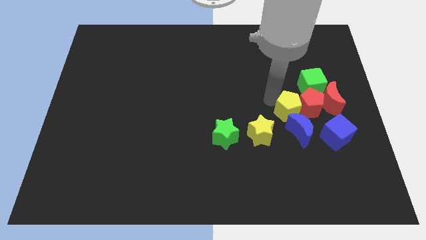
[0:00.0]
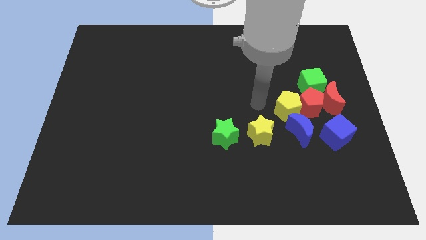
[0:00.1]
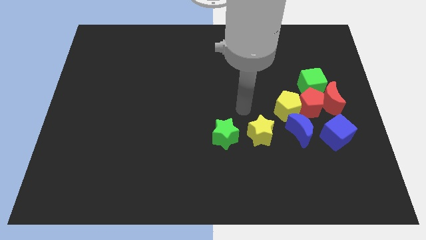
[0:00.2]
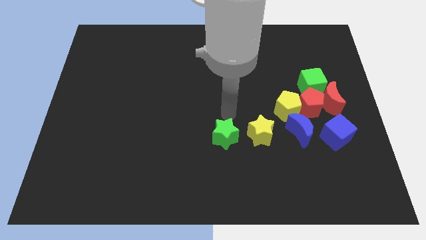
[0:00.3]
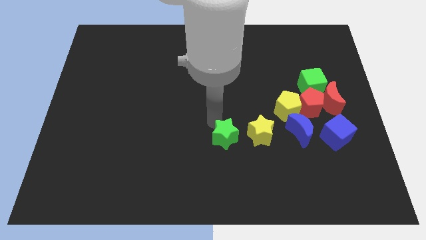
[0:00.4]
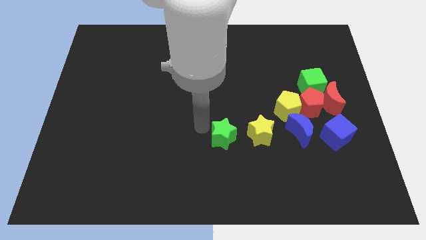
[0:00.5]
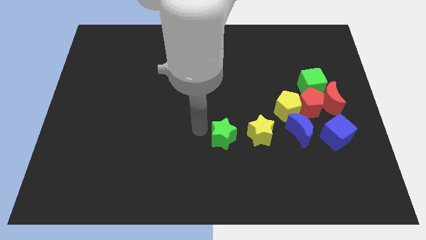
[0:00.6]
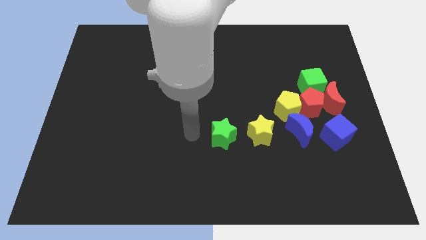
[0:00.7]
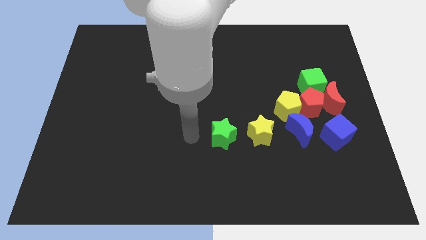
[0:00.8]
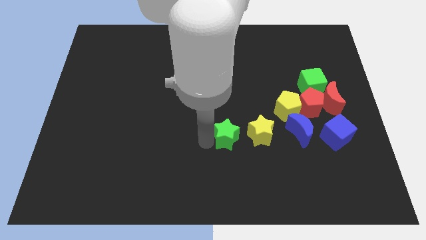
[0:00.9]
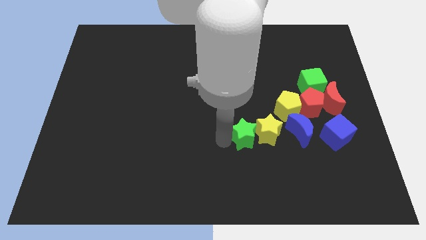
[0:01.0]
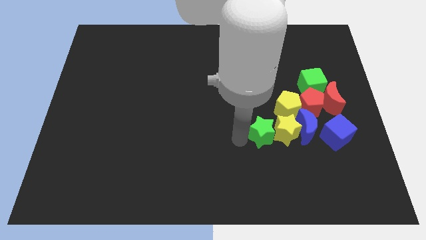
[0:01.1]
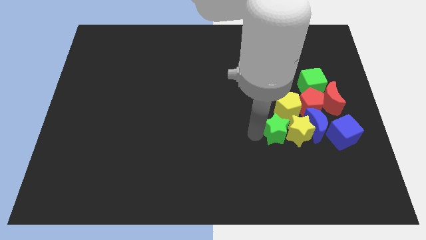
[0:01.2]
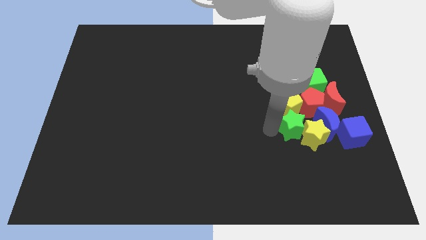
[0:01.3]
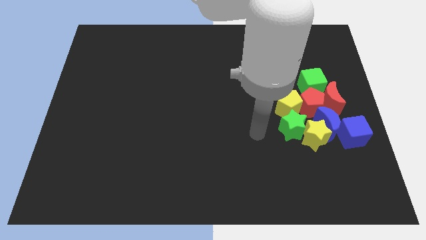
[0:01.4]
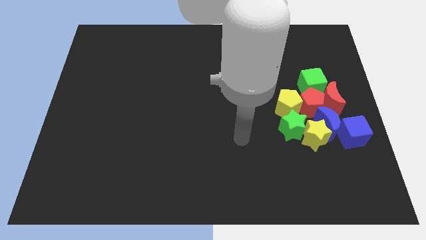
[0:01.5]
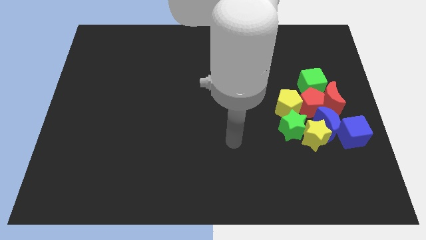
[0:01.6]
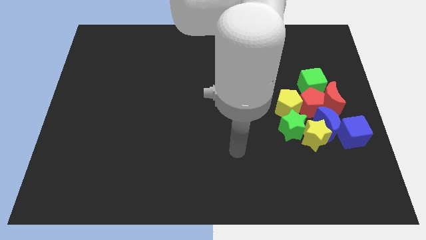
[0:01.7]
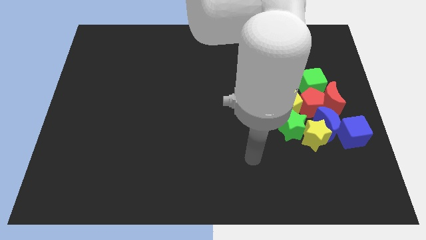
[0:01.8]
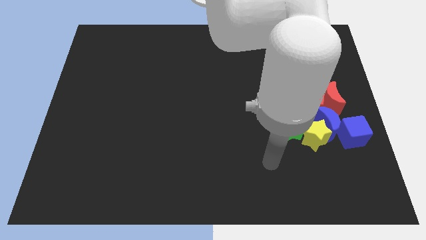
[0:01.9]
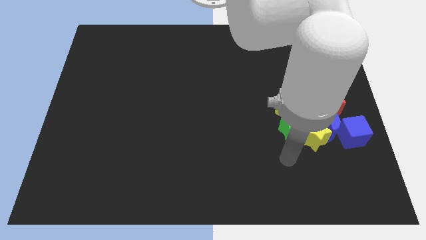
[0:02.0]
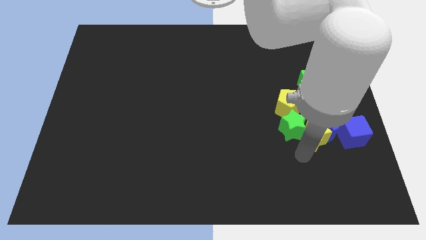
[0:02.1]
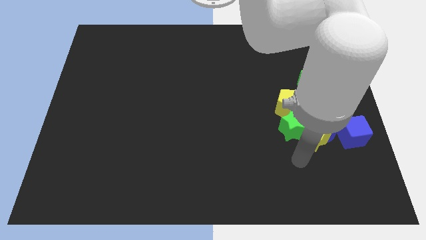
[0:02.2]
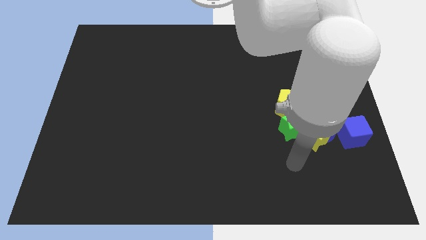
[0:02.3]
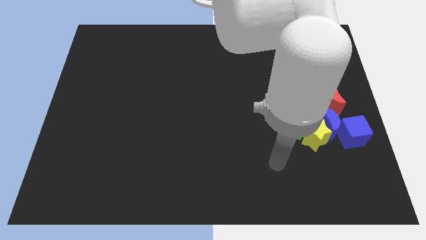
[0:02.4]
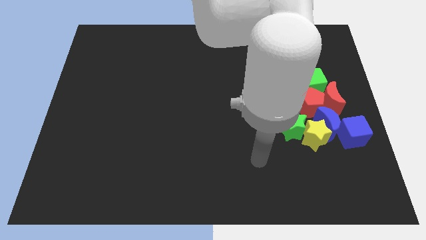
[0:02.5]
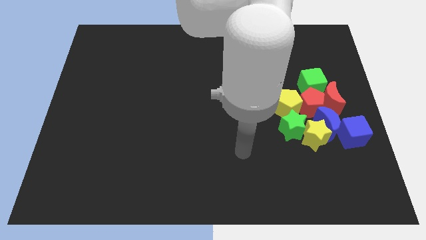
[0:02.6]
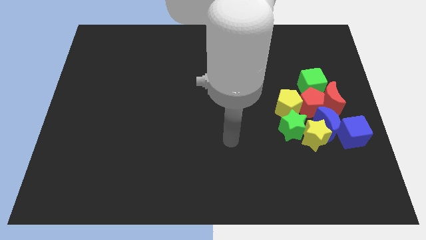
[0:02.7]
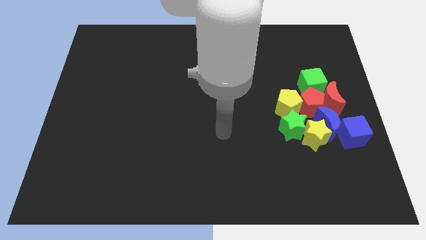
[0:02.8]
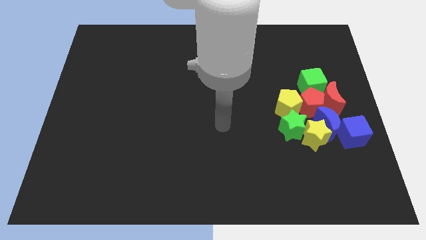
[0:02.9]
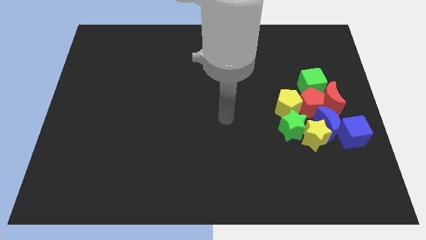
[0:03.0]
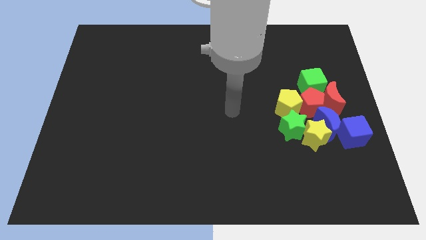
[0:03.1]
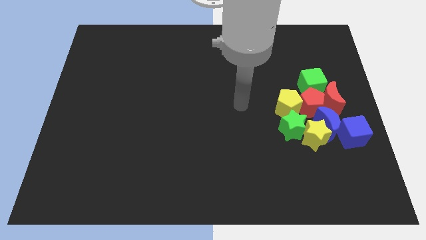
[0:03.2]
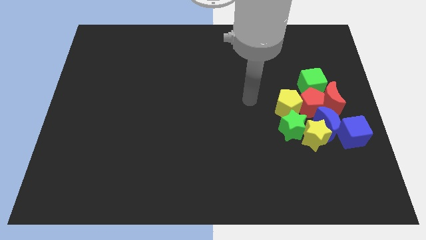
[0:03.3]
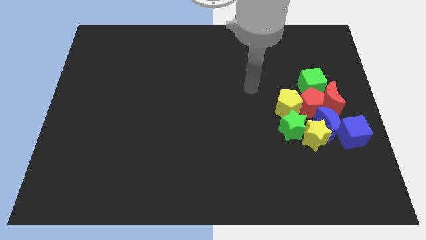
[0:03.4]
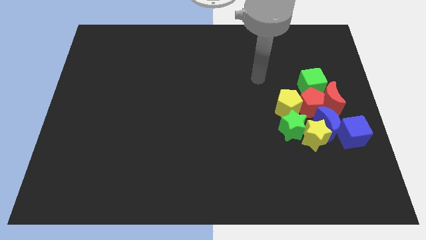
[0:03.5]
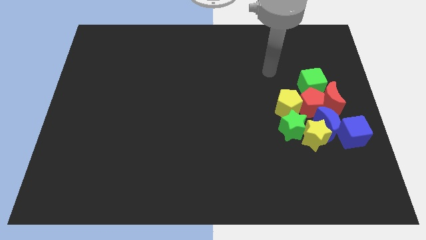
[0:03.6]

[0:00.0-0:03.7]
move the green star towards bottom of the yellow pentagon

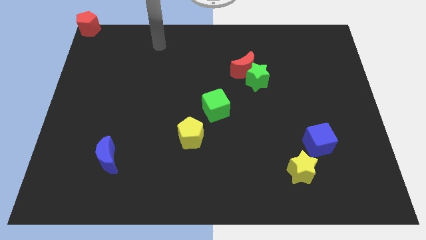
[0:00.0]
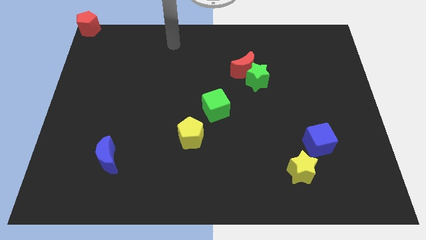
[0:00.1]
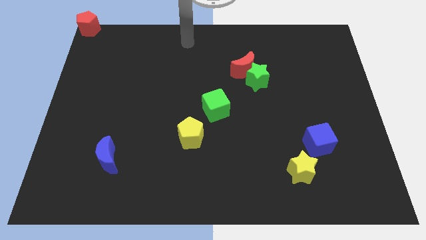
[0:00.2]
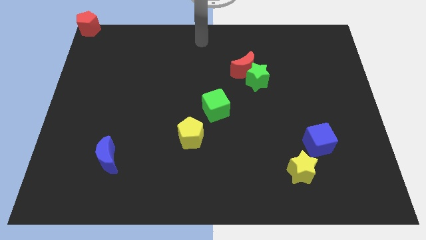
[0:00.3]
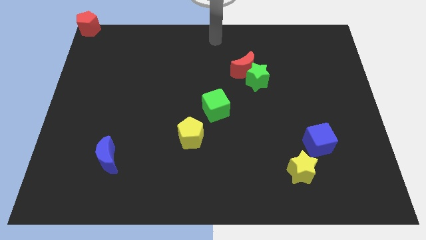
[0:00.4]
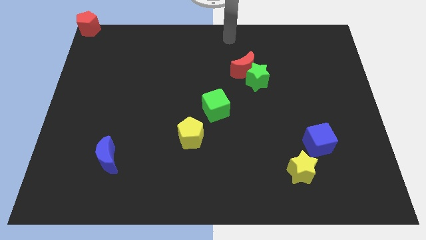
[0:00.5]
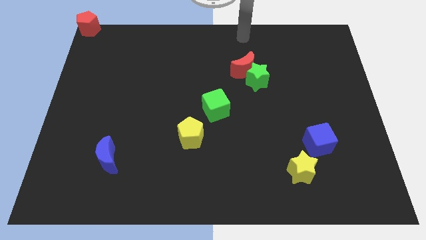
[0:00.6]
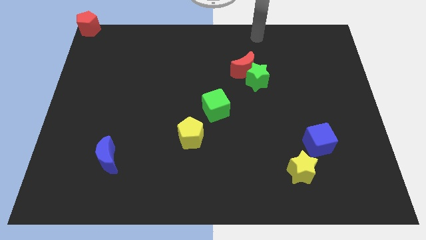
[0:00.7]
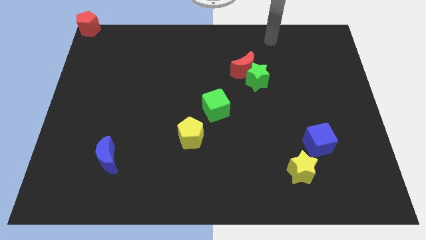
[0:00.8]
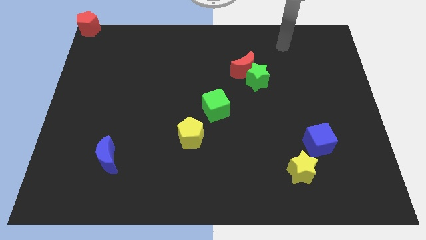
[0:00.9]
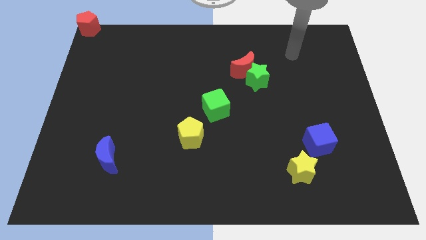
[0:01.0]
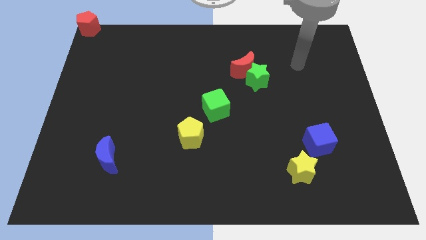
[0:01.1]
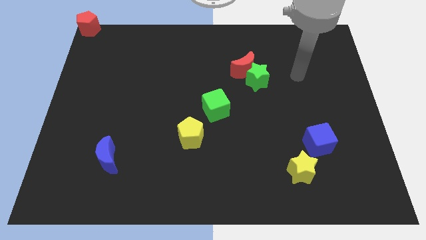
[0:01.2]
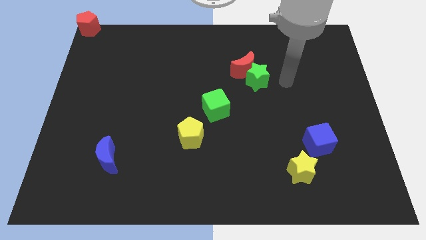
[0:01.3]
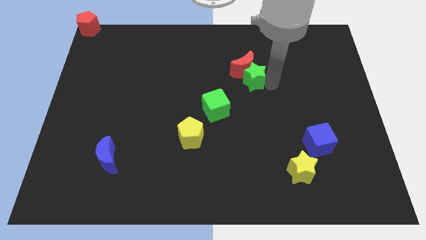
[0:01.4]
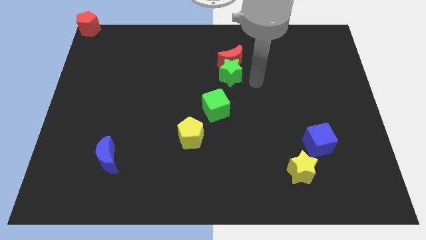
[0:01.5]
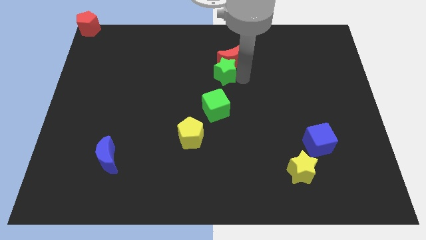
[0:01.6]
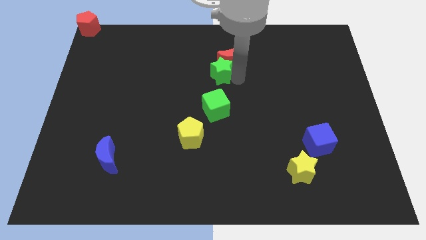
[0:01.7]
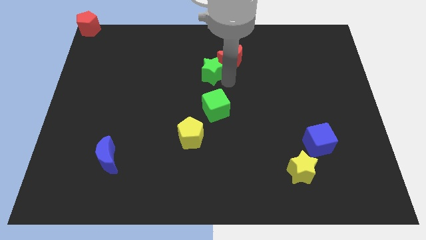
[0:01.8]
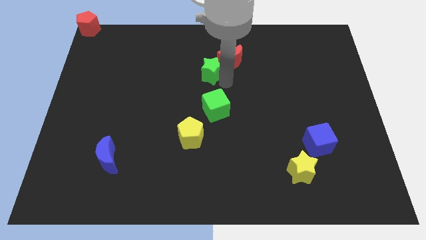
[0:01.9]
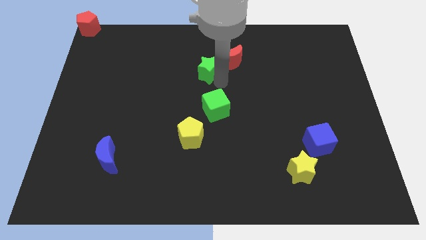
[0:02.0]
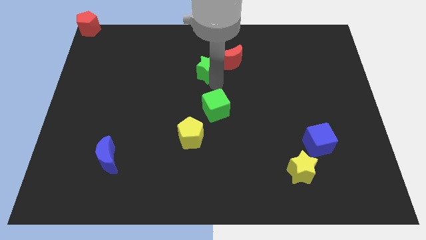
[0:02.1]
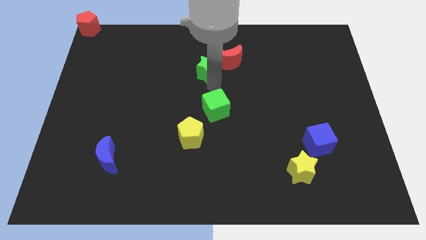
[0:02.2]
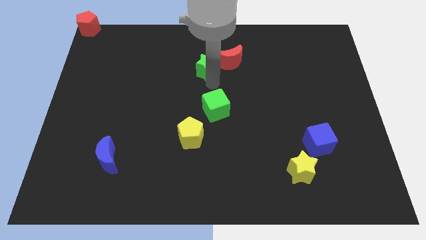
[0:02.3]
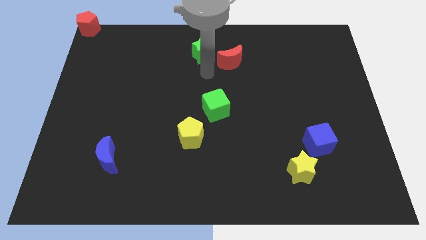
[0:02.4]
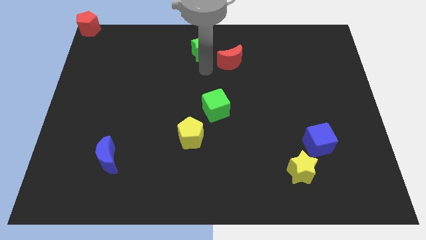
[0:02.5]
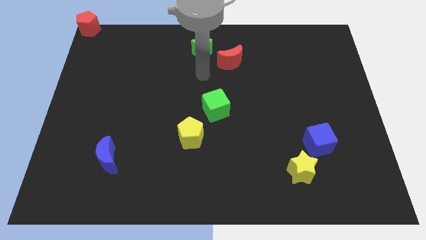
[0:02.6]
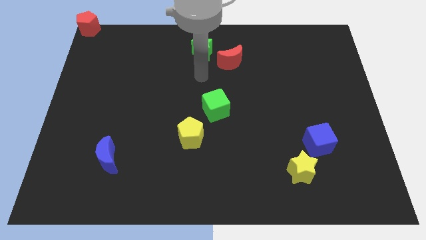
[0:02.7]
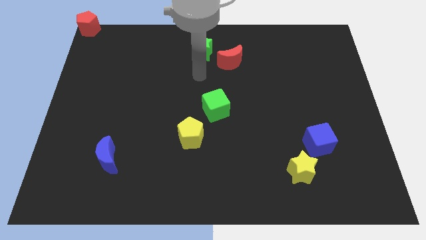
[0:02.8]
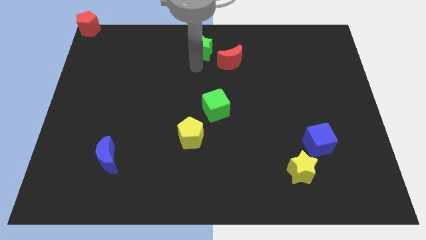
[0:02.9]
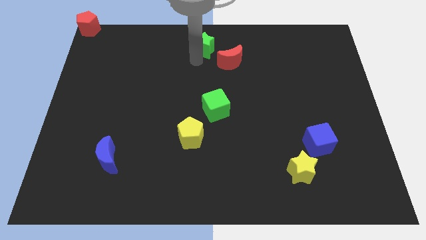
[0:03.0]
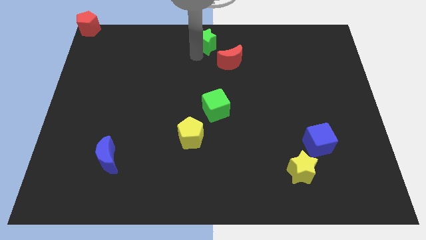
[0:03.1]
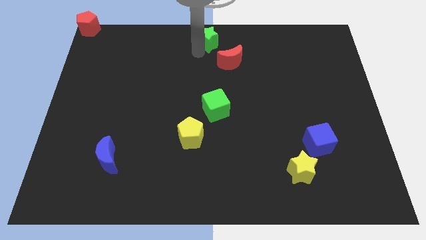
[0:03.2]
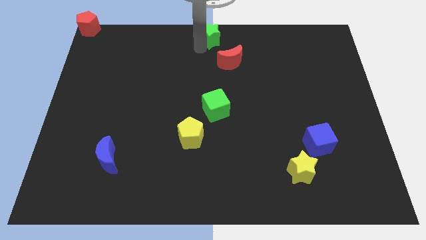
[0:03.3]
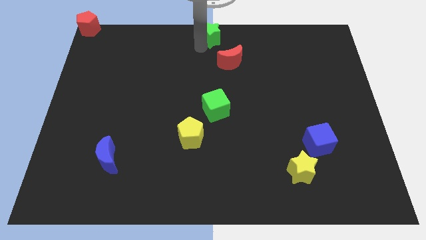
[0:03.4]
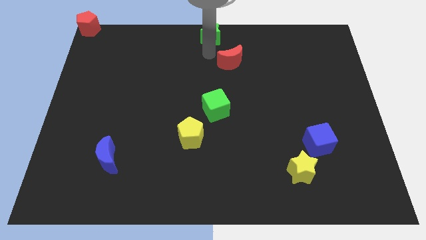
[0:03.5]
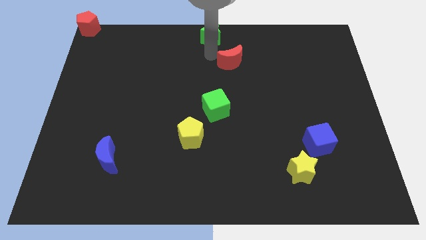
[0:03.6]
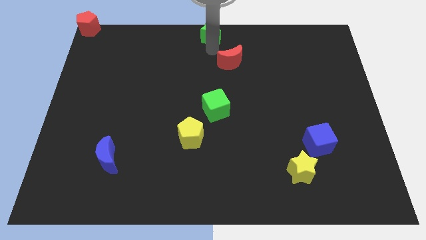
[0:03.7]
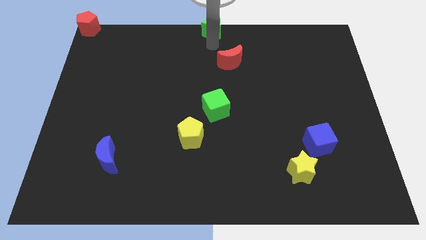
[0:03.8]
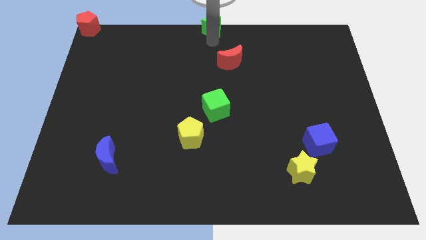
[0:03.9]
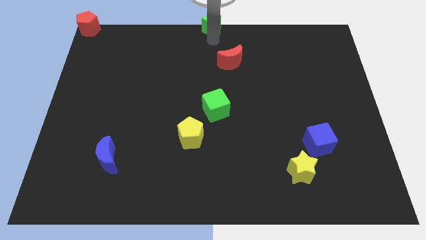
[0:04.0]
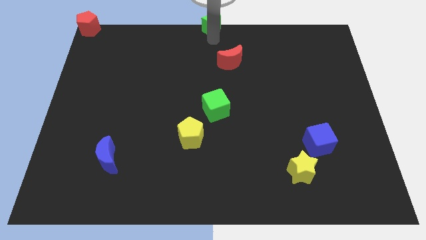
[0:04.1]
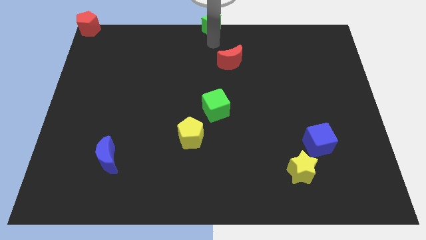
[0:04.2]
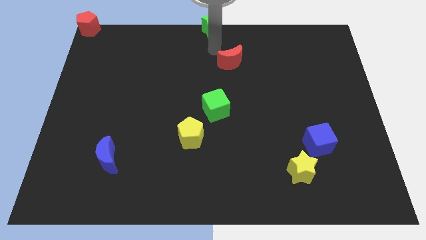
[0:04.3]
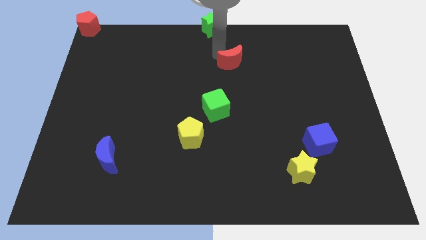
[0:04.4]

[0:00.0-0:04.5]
place green star on top center of the board

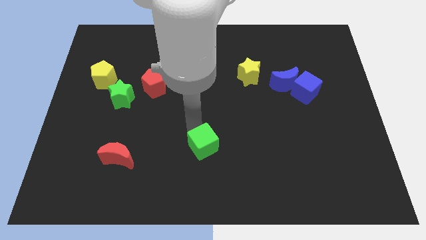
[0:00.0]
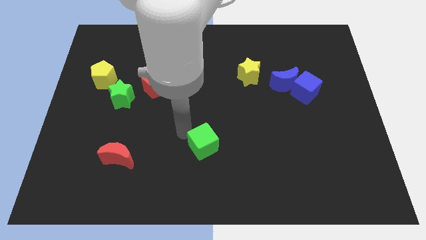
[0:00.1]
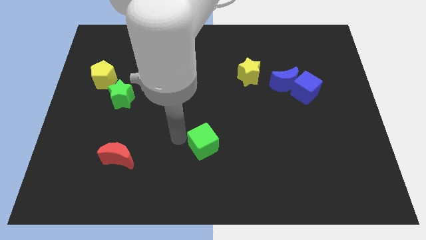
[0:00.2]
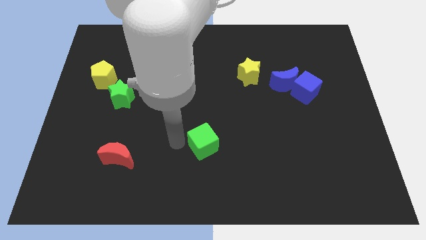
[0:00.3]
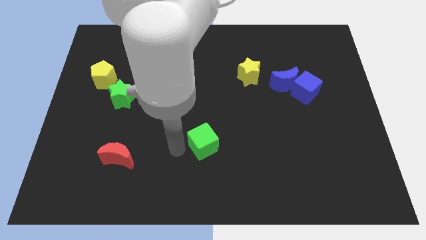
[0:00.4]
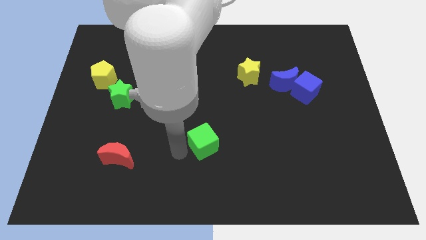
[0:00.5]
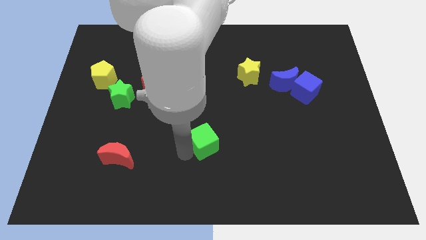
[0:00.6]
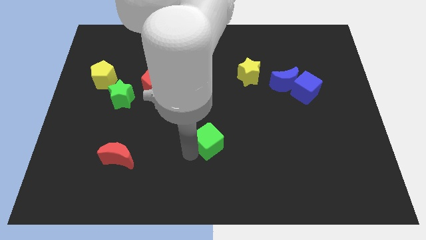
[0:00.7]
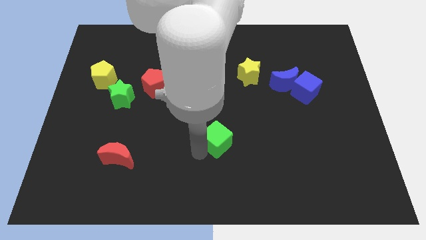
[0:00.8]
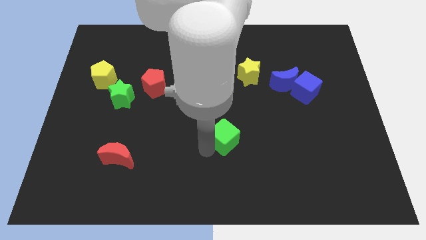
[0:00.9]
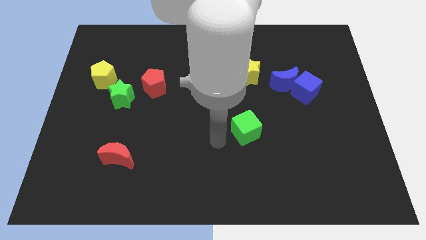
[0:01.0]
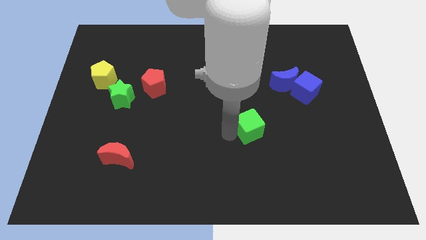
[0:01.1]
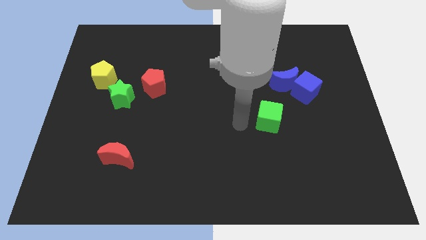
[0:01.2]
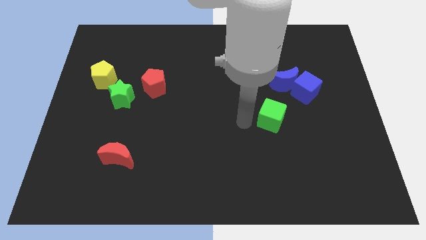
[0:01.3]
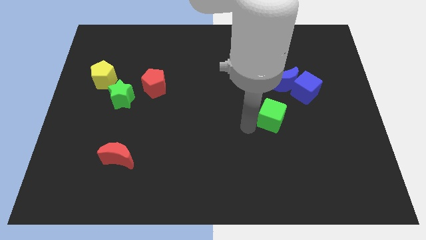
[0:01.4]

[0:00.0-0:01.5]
slide the green cube towards the blue blocks
